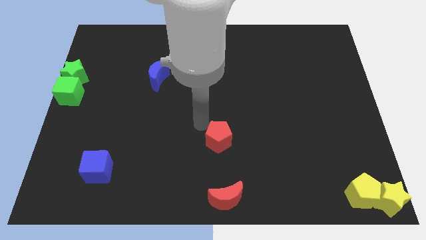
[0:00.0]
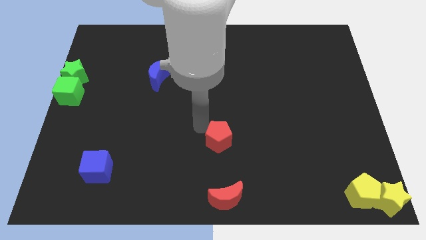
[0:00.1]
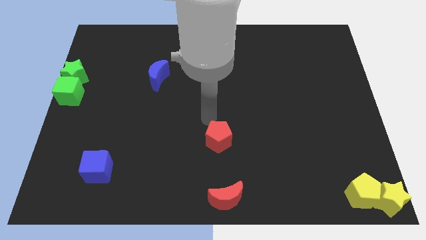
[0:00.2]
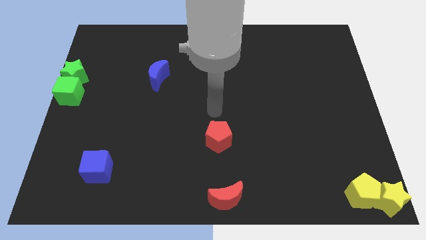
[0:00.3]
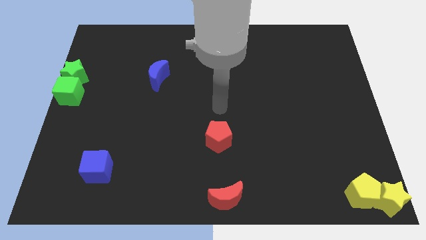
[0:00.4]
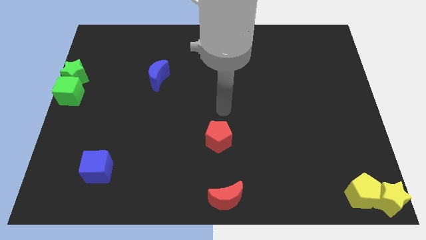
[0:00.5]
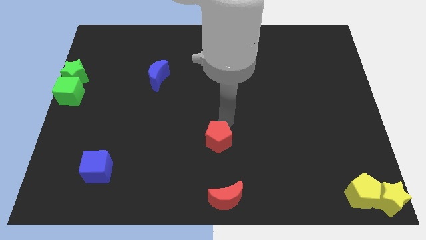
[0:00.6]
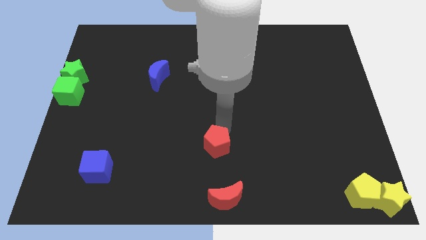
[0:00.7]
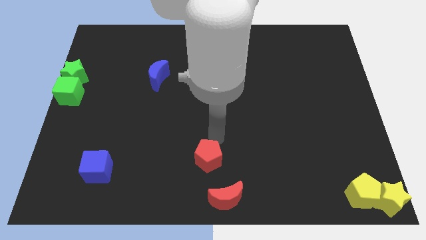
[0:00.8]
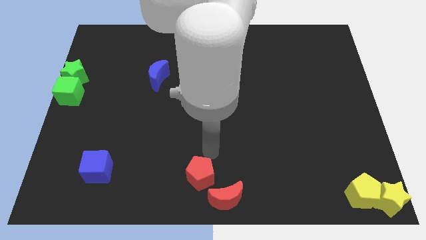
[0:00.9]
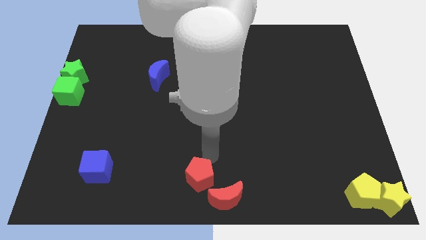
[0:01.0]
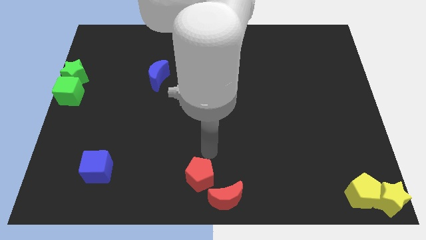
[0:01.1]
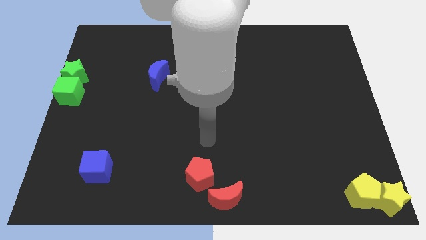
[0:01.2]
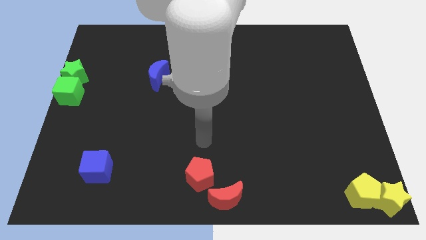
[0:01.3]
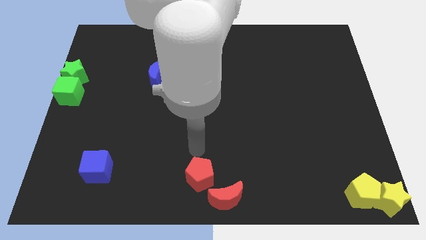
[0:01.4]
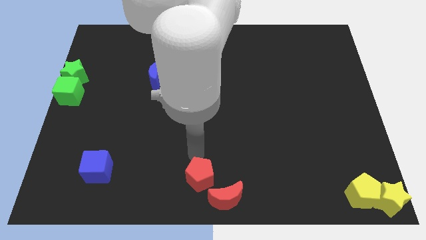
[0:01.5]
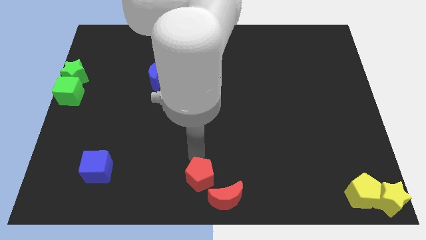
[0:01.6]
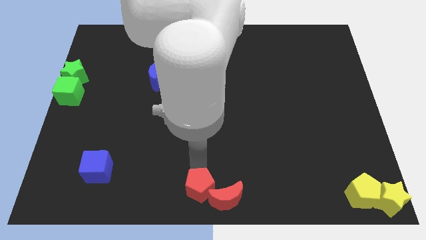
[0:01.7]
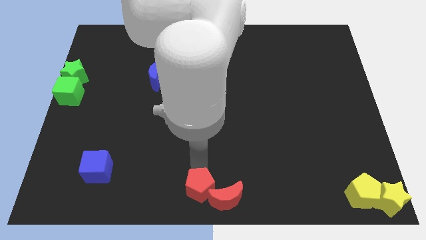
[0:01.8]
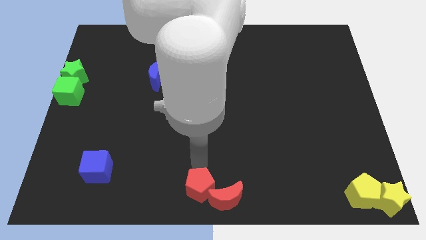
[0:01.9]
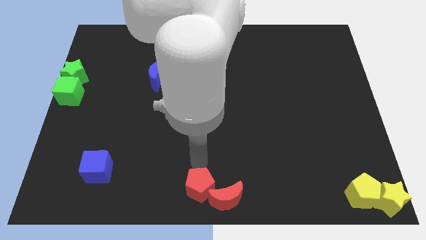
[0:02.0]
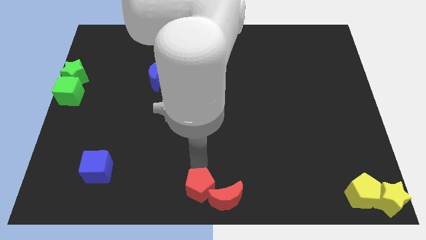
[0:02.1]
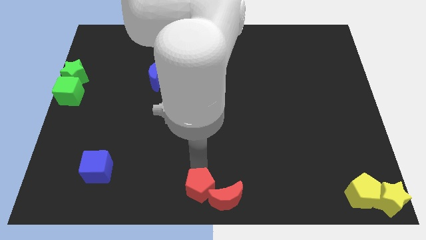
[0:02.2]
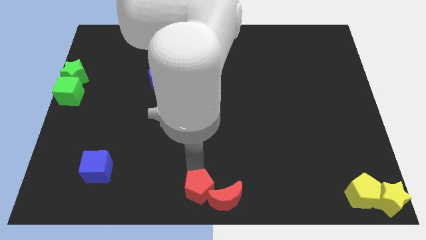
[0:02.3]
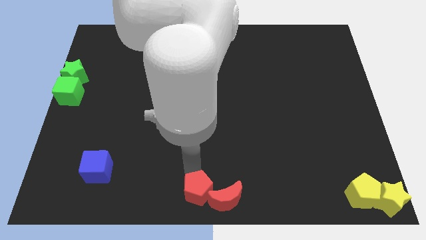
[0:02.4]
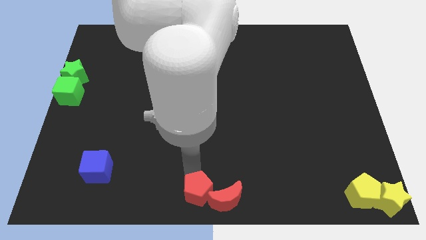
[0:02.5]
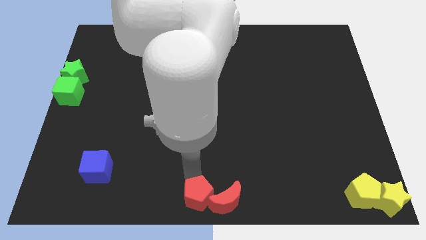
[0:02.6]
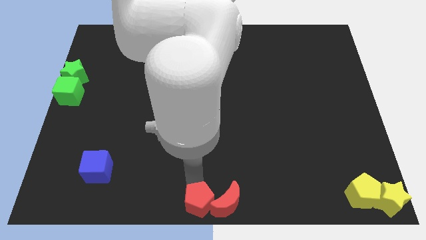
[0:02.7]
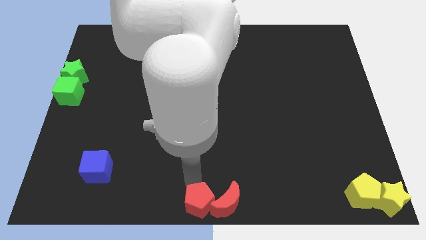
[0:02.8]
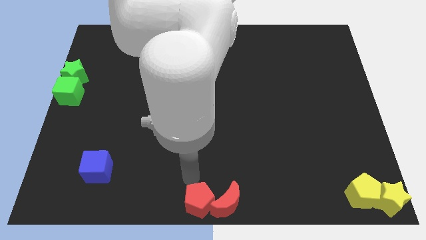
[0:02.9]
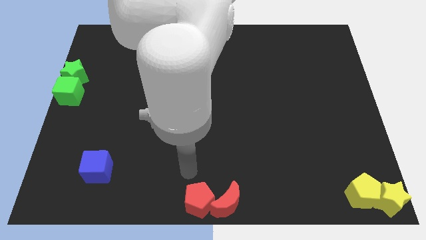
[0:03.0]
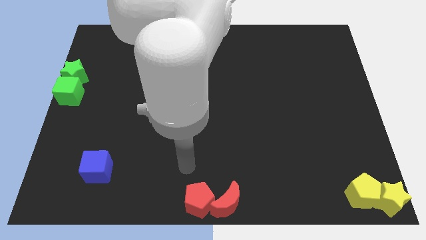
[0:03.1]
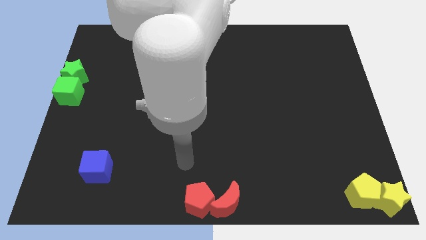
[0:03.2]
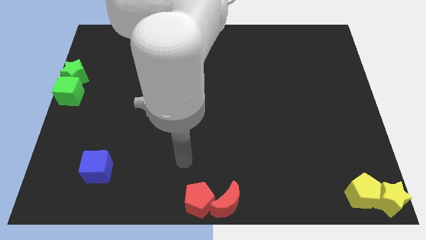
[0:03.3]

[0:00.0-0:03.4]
place the red pentagon towards the left side of the red crescent

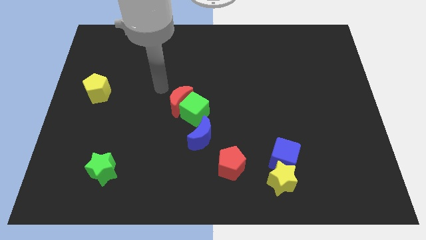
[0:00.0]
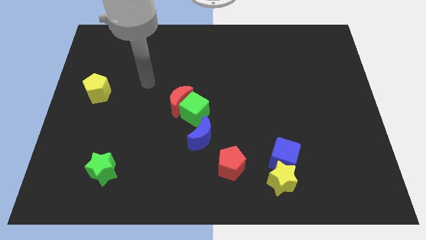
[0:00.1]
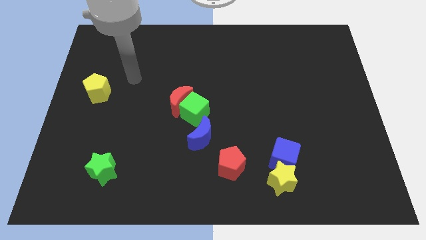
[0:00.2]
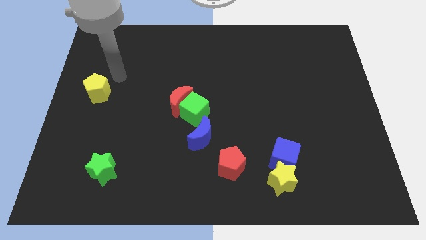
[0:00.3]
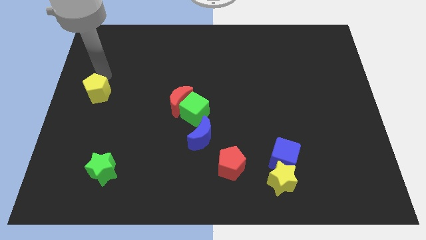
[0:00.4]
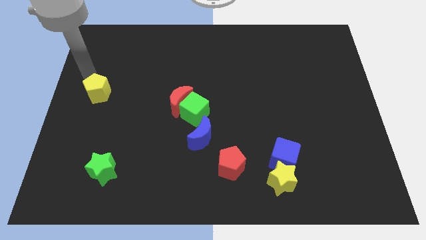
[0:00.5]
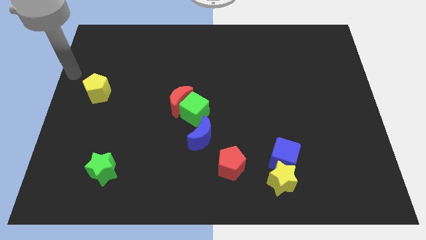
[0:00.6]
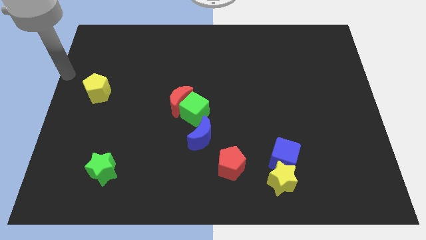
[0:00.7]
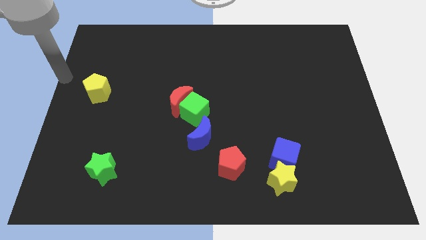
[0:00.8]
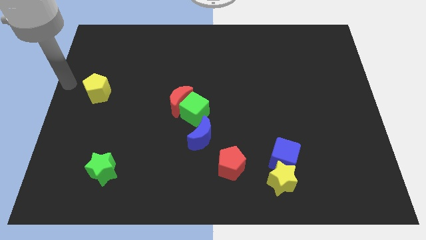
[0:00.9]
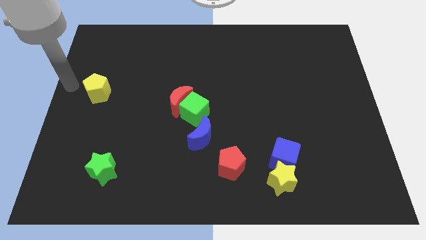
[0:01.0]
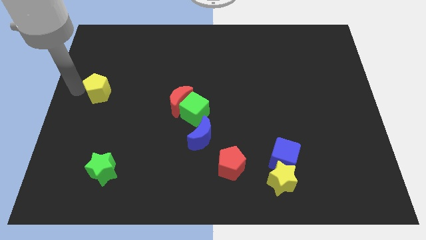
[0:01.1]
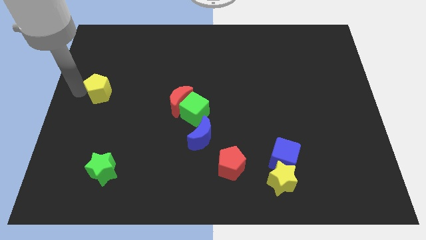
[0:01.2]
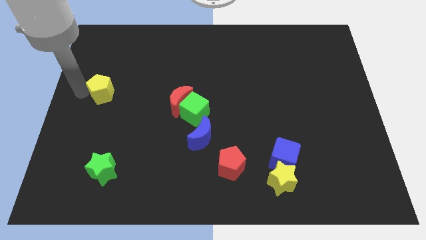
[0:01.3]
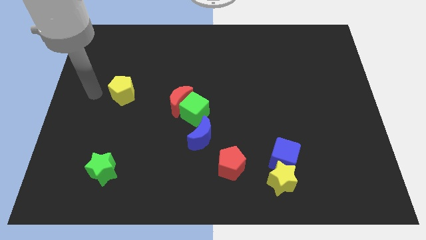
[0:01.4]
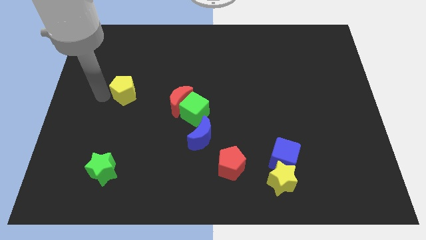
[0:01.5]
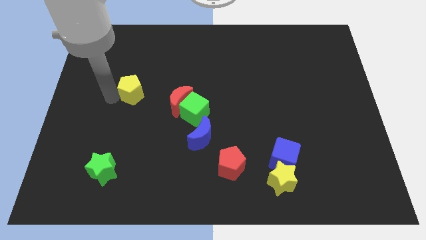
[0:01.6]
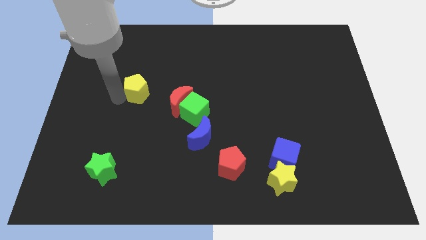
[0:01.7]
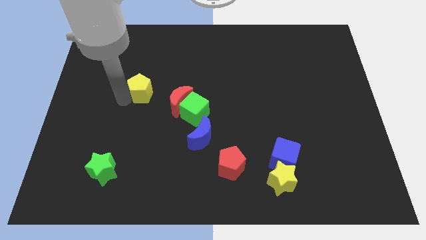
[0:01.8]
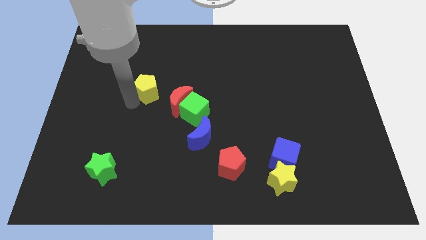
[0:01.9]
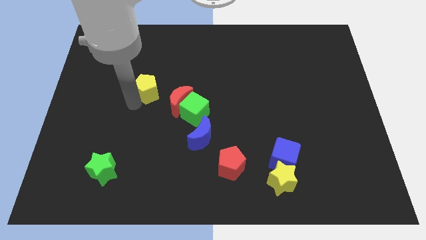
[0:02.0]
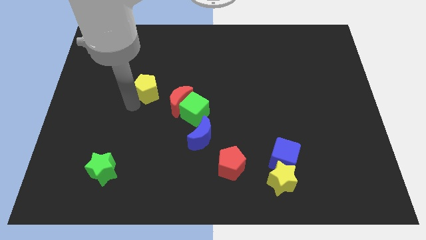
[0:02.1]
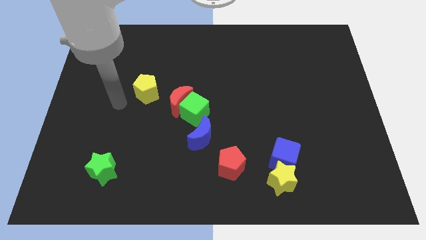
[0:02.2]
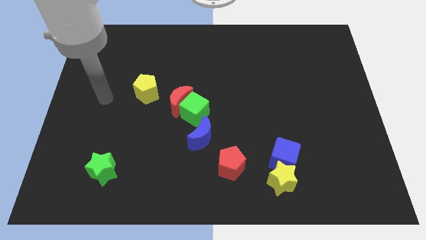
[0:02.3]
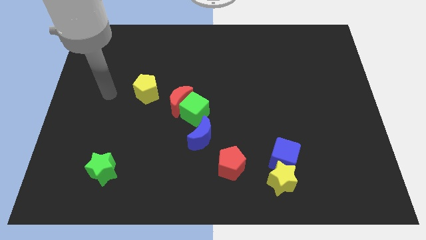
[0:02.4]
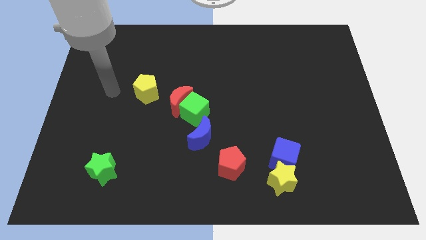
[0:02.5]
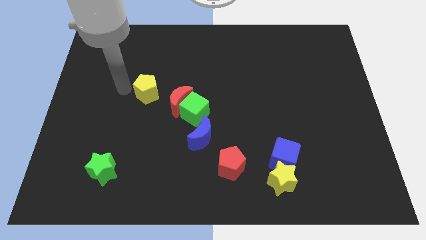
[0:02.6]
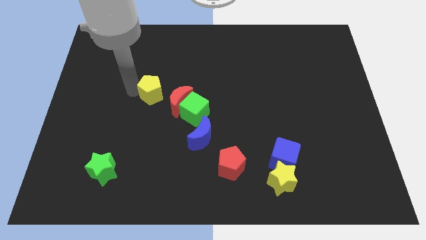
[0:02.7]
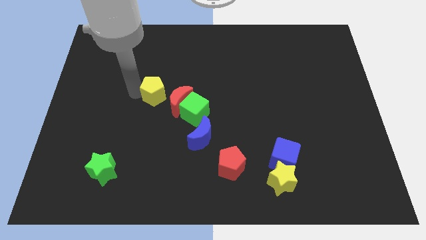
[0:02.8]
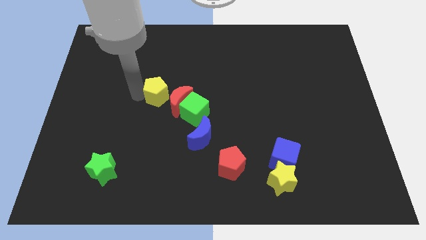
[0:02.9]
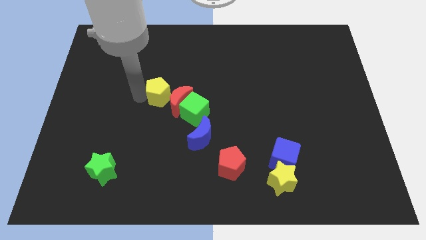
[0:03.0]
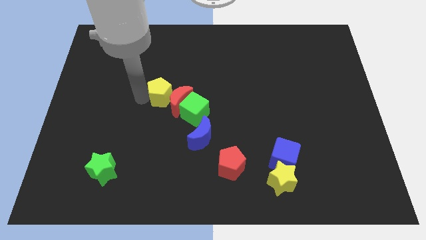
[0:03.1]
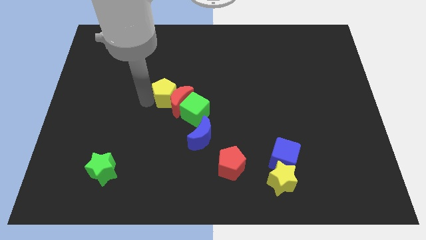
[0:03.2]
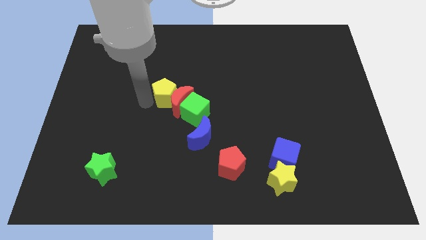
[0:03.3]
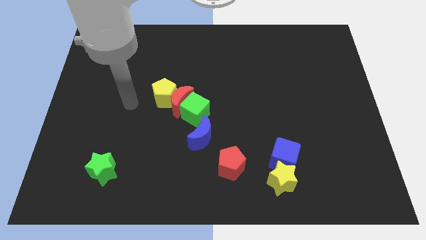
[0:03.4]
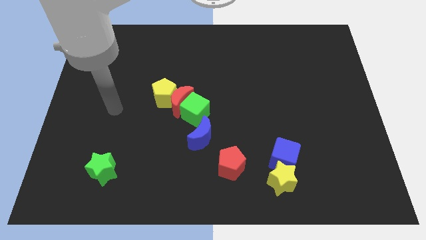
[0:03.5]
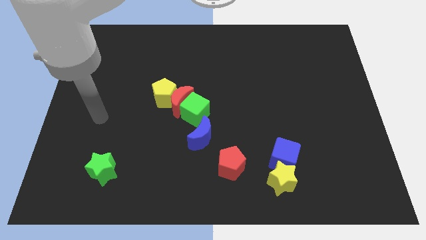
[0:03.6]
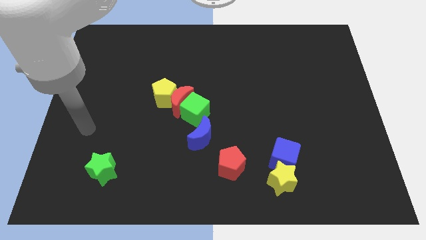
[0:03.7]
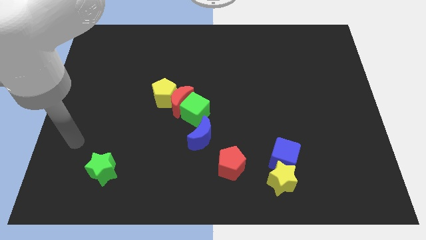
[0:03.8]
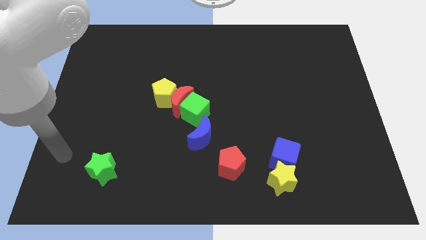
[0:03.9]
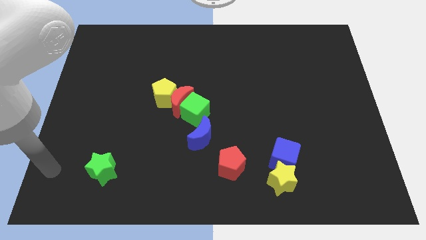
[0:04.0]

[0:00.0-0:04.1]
slide yellow pentagon to the left of red moon

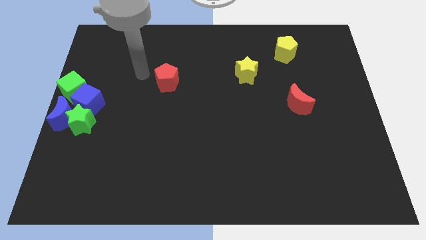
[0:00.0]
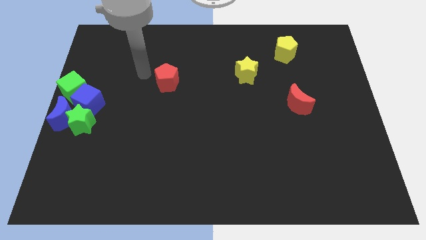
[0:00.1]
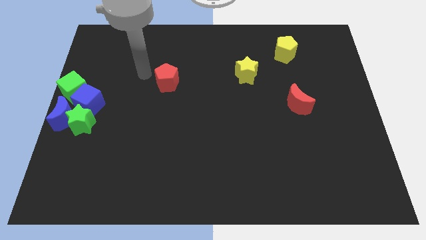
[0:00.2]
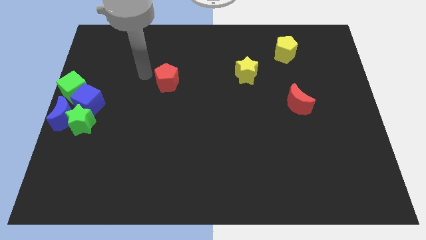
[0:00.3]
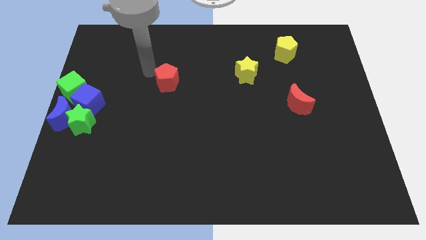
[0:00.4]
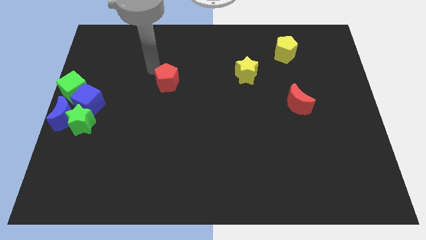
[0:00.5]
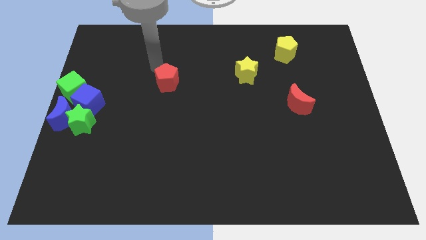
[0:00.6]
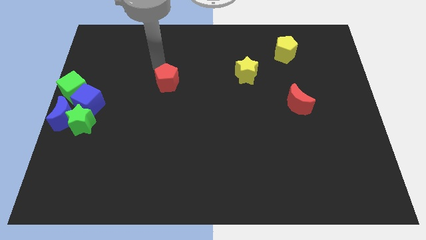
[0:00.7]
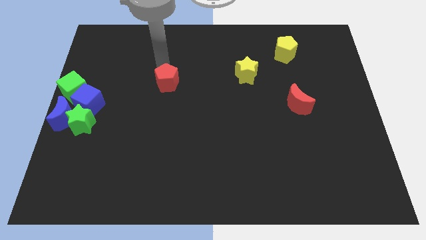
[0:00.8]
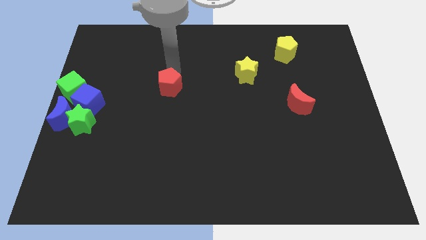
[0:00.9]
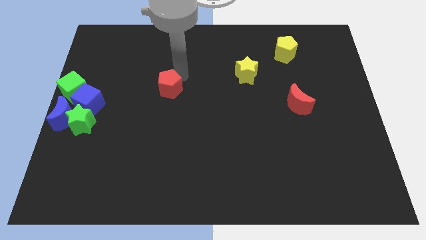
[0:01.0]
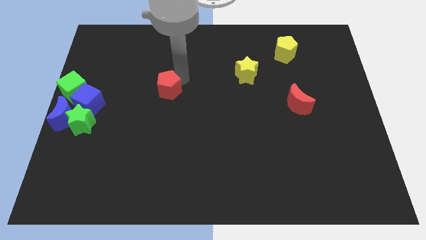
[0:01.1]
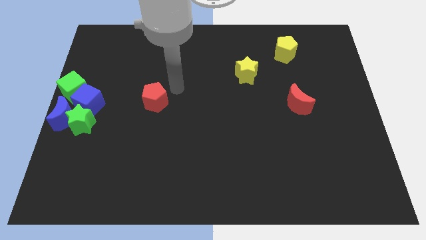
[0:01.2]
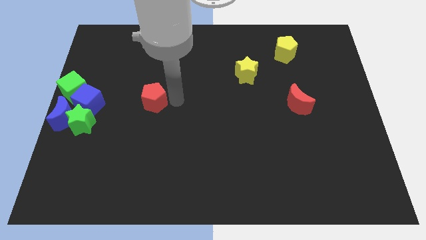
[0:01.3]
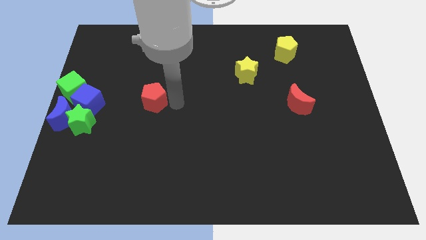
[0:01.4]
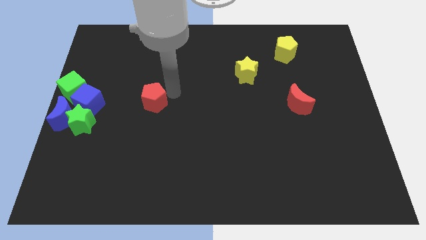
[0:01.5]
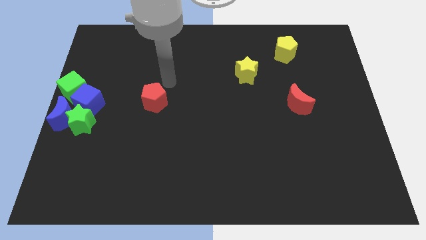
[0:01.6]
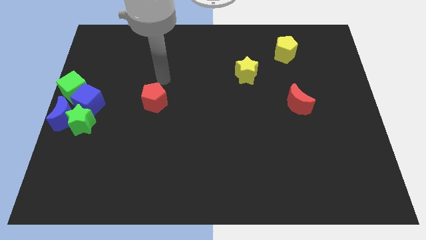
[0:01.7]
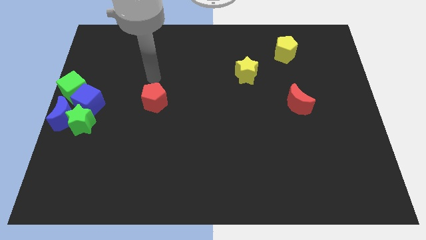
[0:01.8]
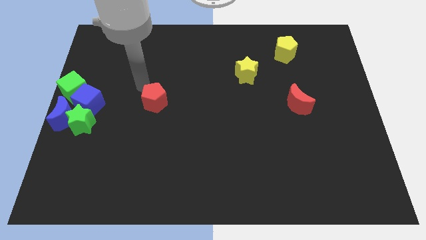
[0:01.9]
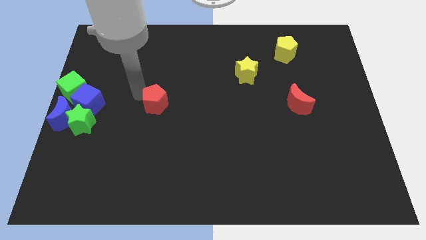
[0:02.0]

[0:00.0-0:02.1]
place the red pentagon parallel right to the blue cube
